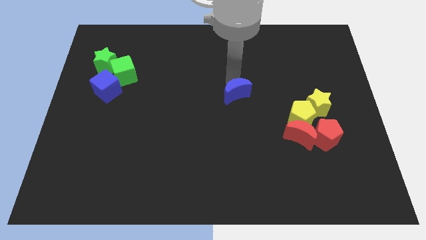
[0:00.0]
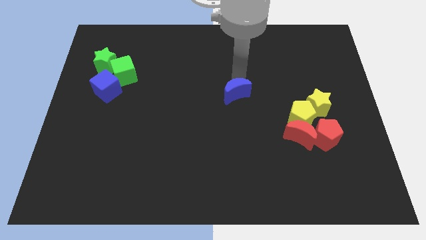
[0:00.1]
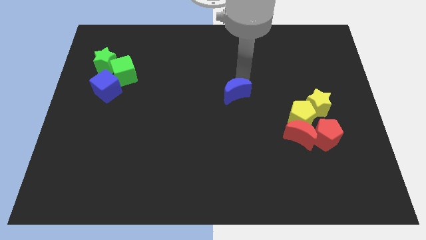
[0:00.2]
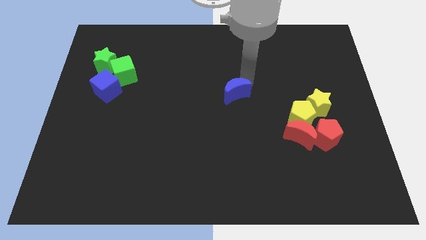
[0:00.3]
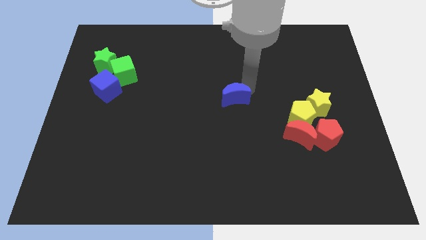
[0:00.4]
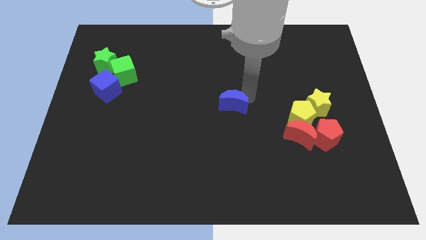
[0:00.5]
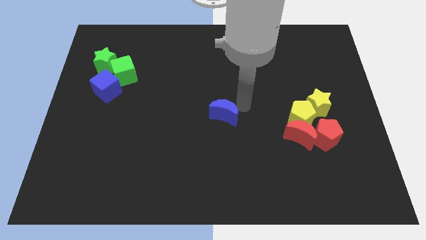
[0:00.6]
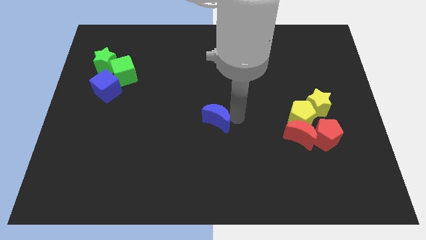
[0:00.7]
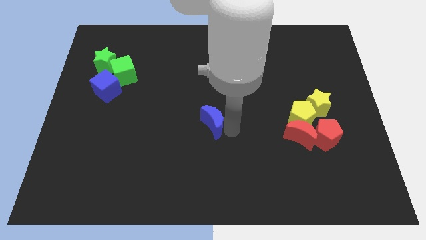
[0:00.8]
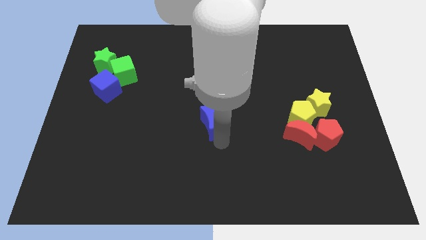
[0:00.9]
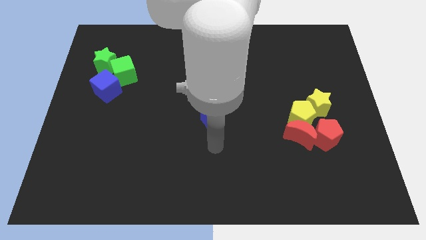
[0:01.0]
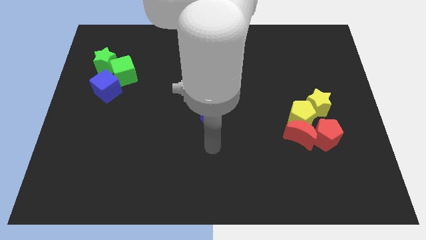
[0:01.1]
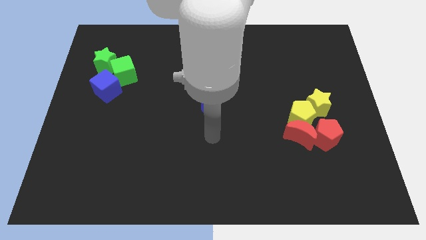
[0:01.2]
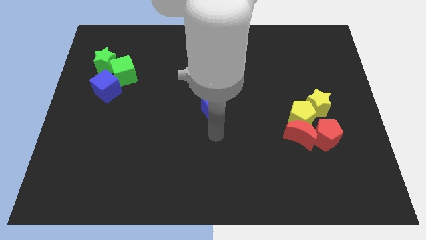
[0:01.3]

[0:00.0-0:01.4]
place the blue moon at the center of the board

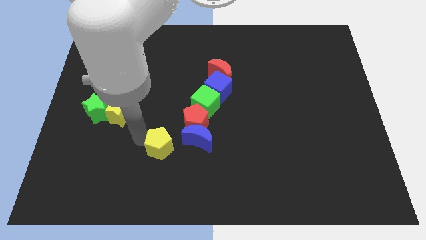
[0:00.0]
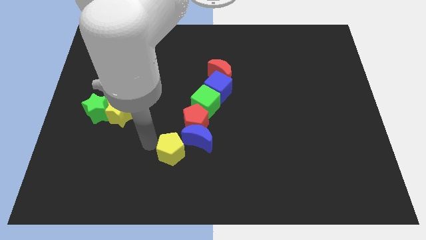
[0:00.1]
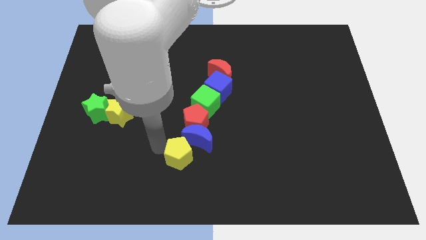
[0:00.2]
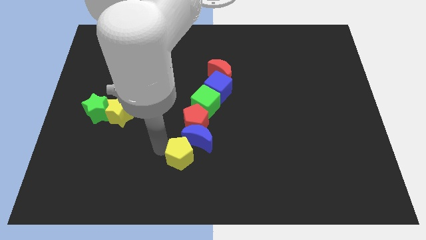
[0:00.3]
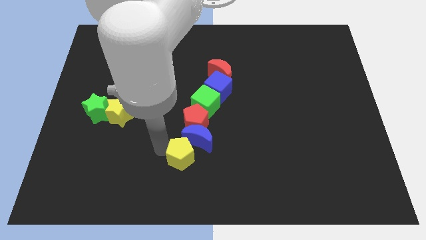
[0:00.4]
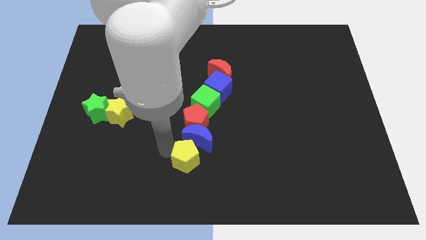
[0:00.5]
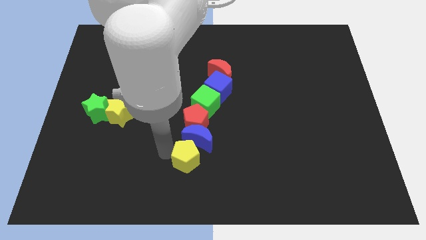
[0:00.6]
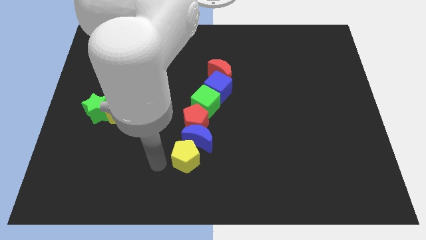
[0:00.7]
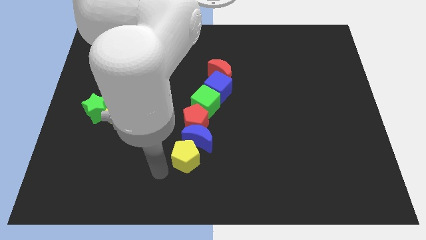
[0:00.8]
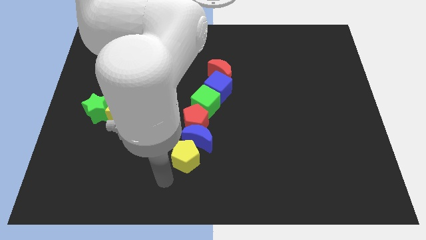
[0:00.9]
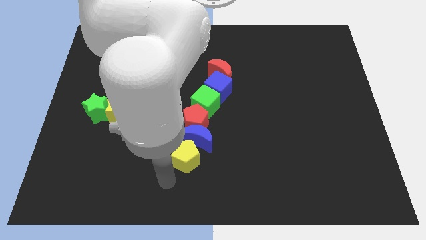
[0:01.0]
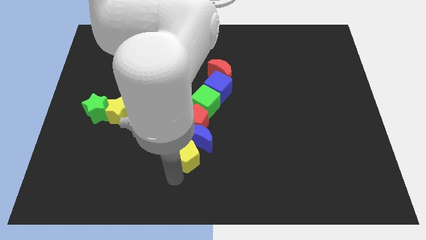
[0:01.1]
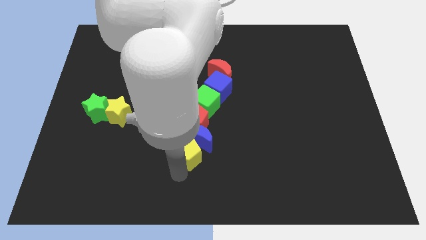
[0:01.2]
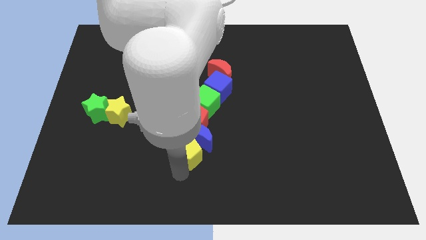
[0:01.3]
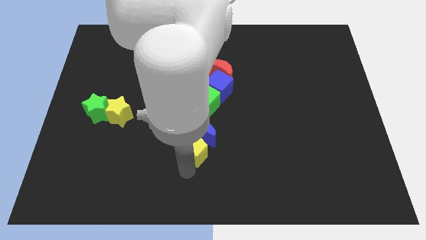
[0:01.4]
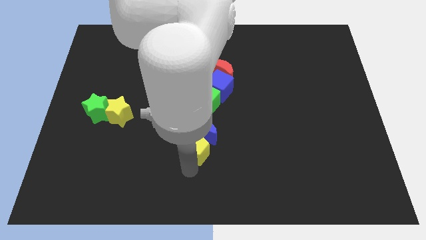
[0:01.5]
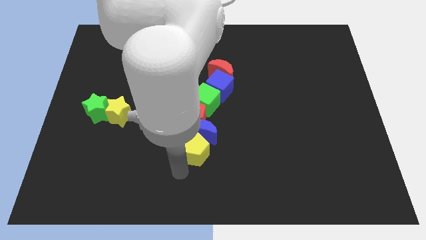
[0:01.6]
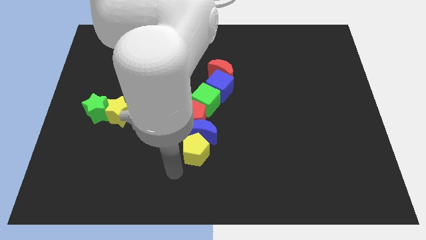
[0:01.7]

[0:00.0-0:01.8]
push the yellow pentagon into the blue crescent

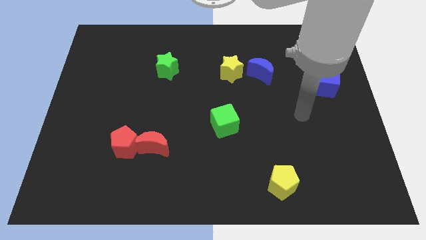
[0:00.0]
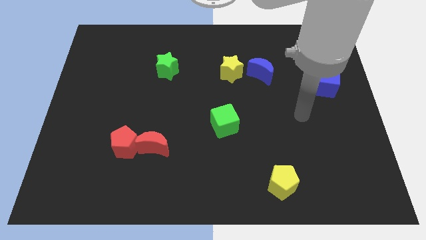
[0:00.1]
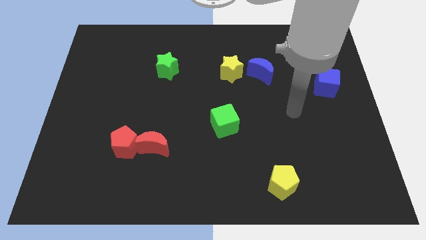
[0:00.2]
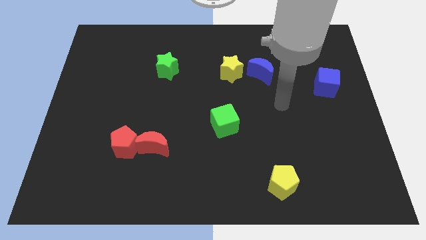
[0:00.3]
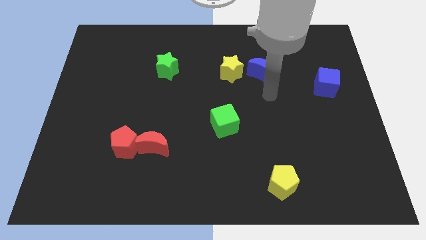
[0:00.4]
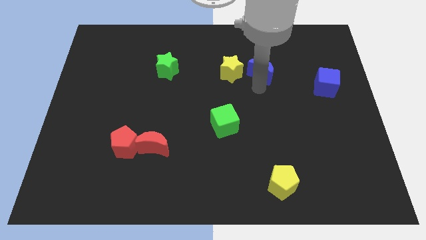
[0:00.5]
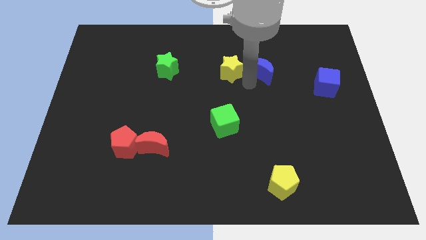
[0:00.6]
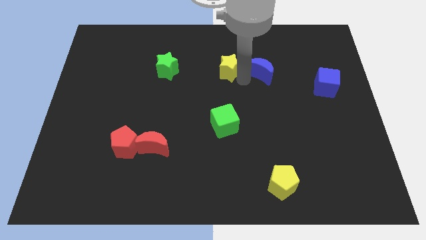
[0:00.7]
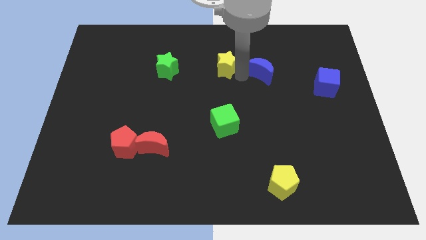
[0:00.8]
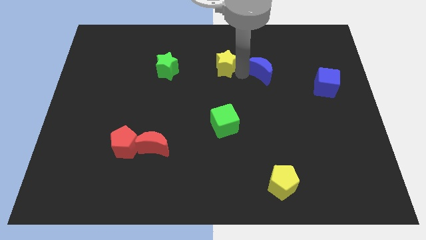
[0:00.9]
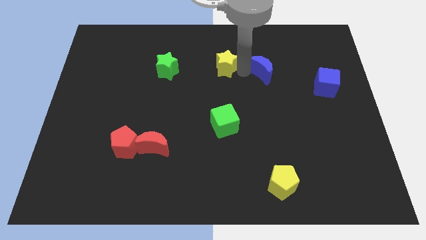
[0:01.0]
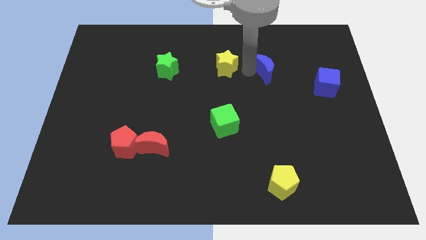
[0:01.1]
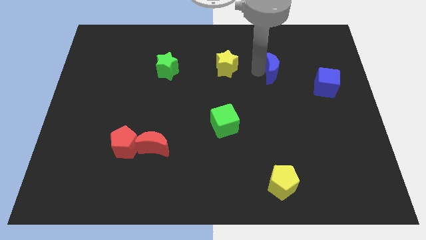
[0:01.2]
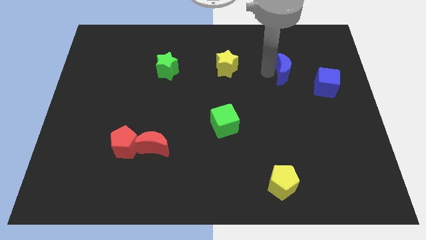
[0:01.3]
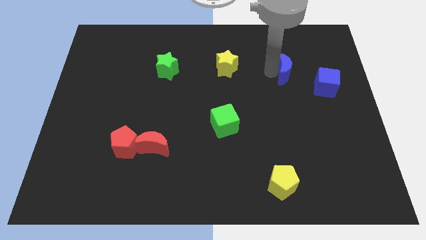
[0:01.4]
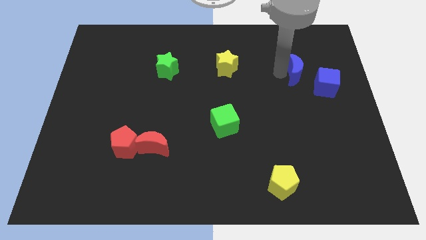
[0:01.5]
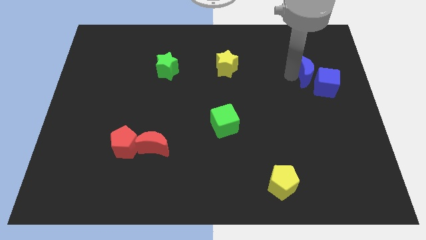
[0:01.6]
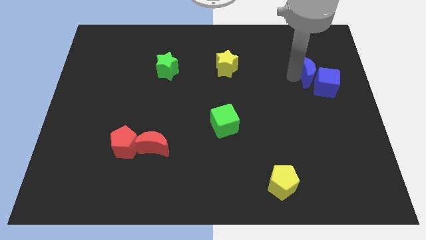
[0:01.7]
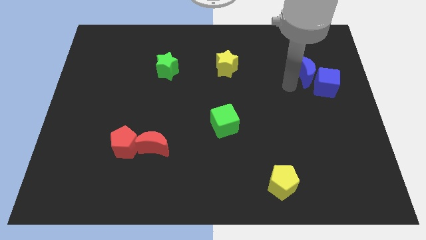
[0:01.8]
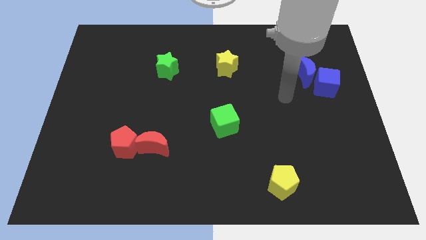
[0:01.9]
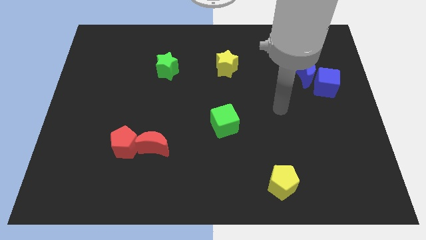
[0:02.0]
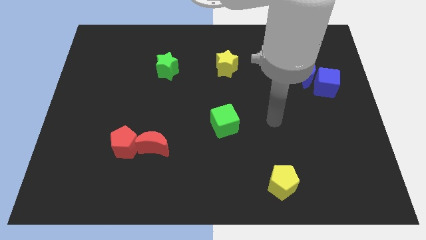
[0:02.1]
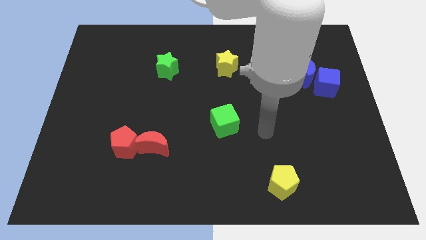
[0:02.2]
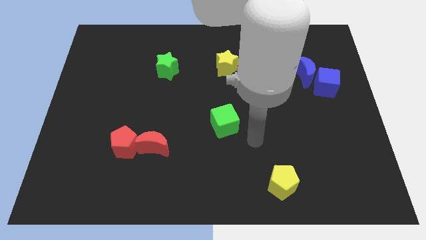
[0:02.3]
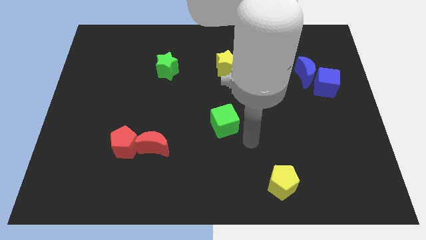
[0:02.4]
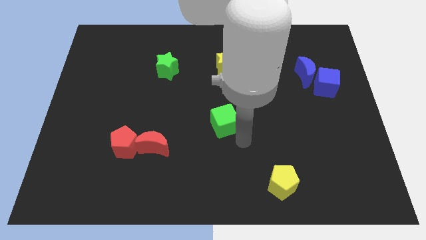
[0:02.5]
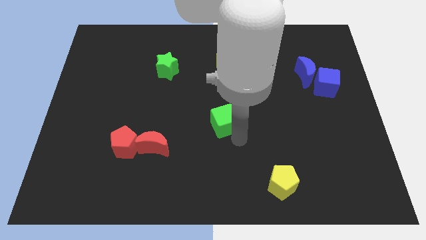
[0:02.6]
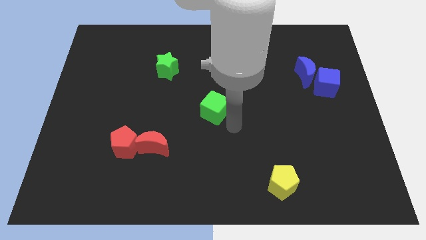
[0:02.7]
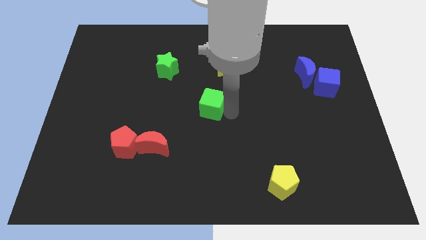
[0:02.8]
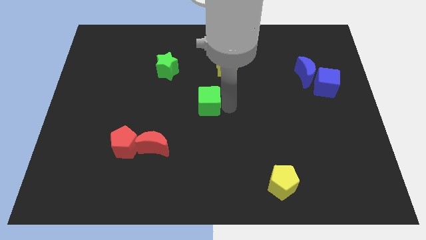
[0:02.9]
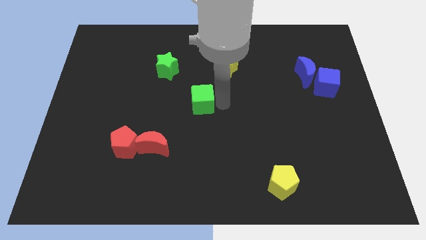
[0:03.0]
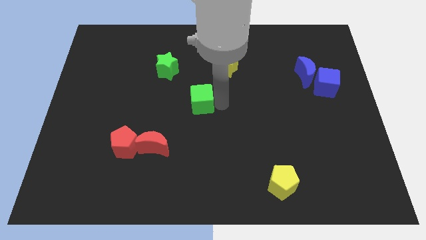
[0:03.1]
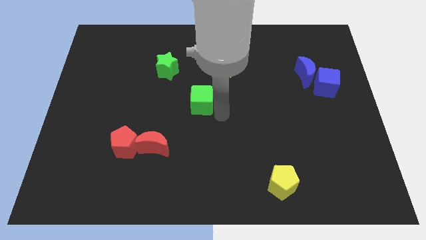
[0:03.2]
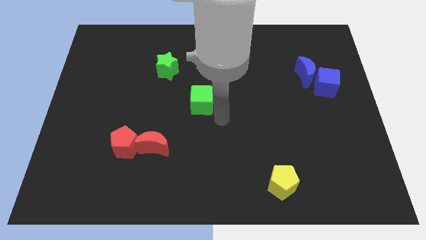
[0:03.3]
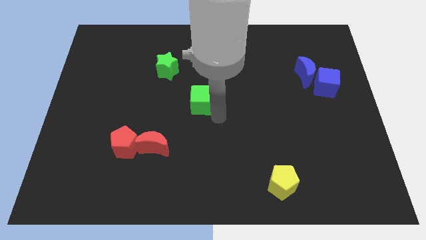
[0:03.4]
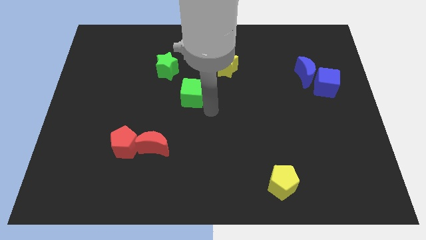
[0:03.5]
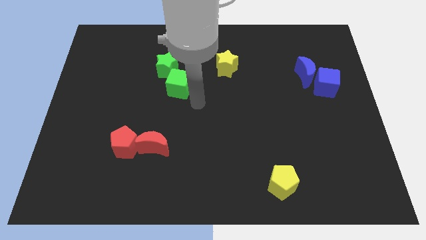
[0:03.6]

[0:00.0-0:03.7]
move green blocks and the blue blocks diagonal to each other

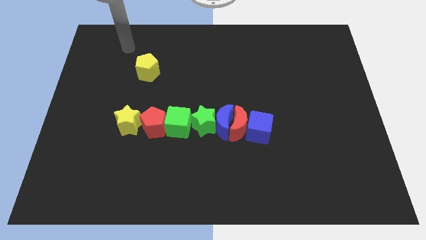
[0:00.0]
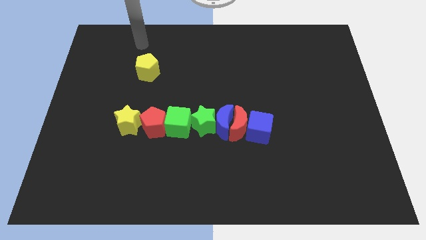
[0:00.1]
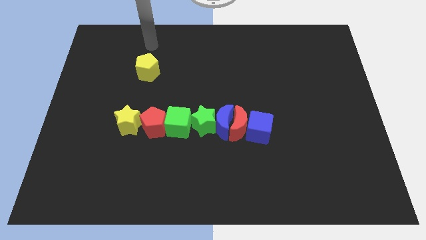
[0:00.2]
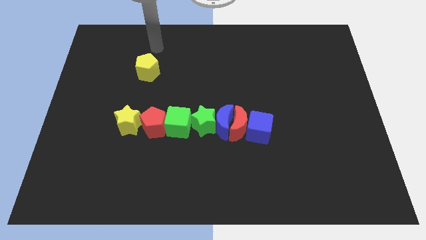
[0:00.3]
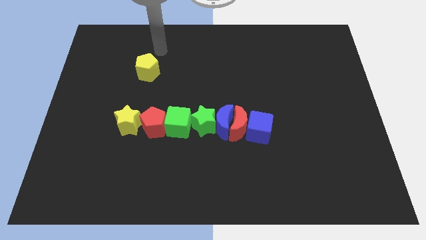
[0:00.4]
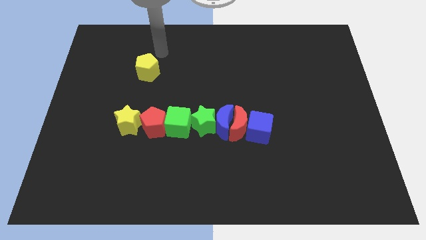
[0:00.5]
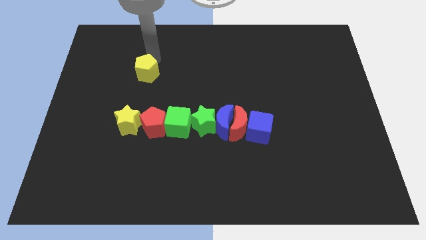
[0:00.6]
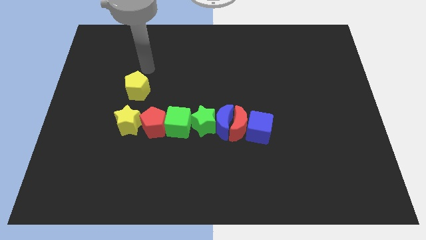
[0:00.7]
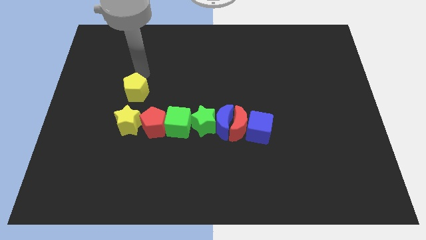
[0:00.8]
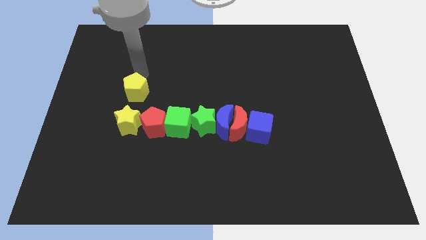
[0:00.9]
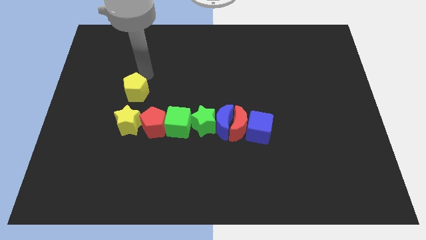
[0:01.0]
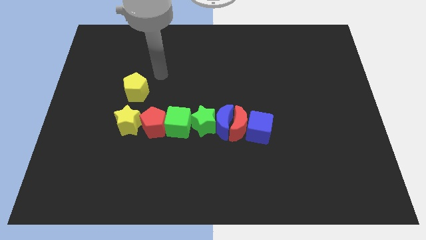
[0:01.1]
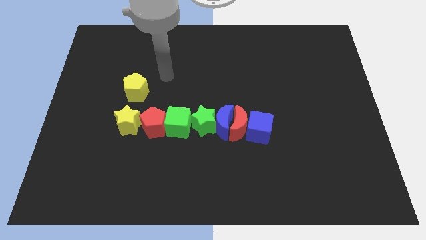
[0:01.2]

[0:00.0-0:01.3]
push the yellow pentagon to the top of the yellow star

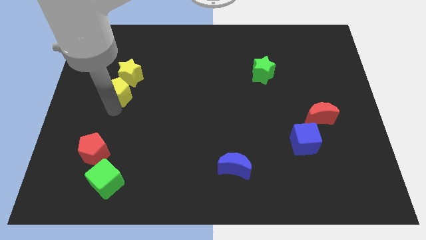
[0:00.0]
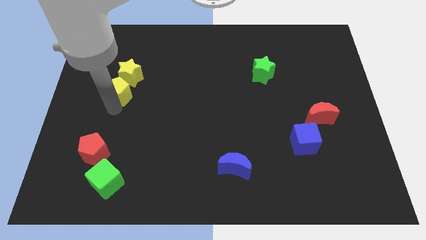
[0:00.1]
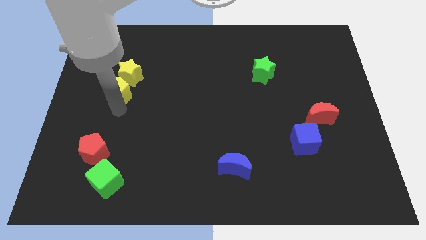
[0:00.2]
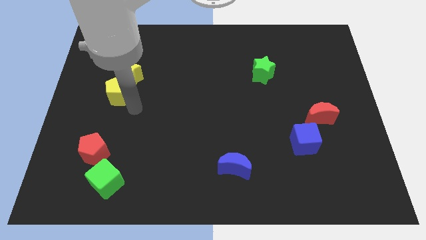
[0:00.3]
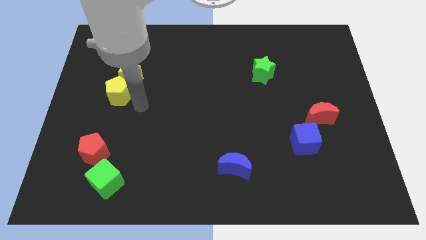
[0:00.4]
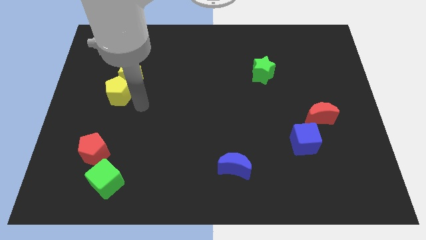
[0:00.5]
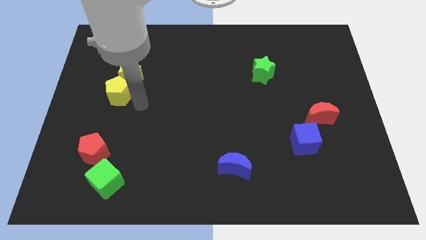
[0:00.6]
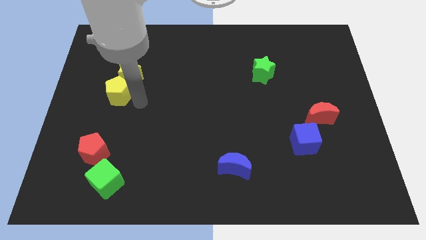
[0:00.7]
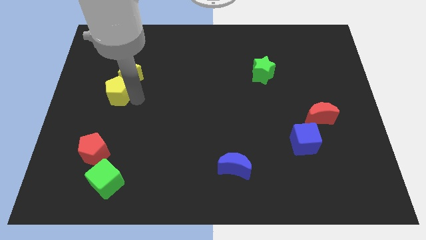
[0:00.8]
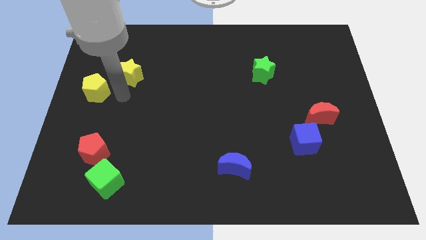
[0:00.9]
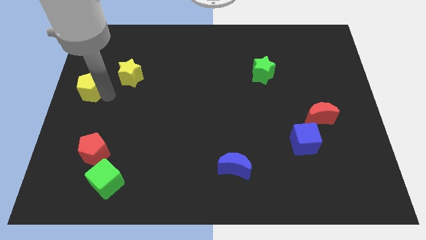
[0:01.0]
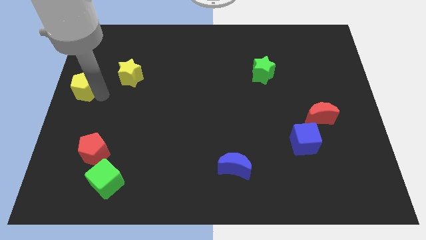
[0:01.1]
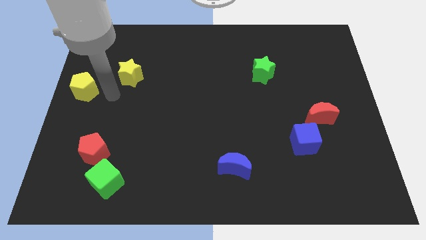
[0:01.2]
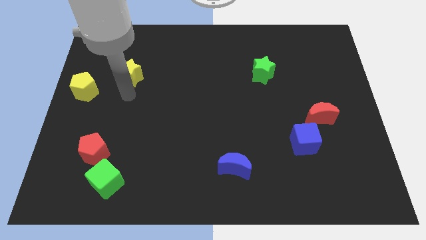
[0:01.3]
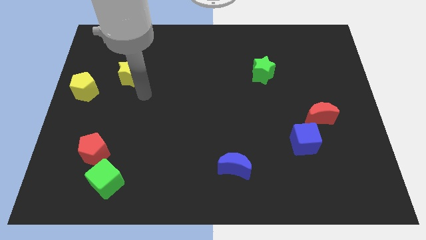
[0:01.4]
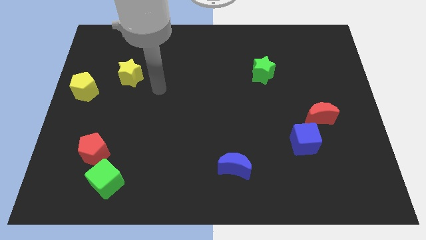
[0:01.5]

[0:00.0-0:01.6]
separate the yellow star and yellow pentagon
